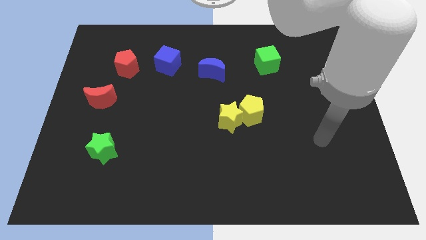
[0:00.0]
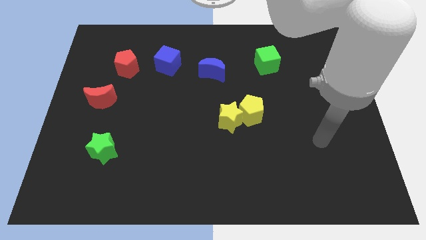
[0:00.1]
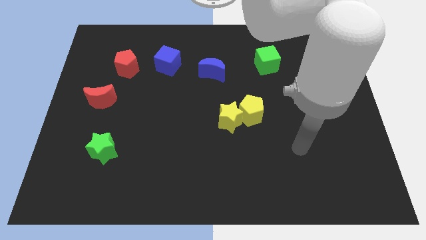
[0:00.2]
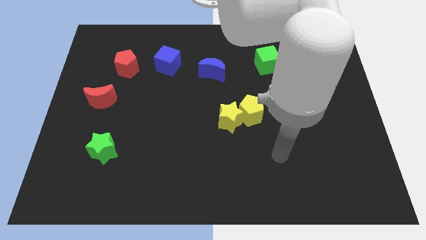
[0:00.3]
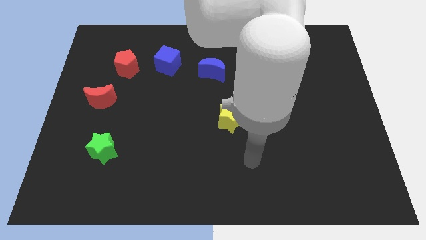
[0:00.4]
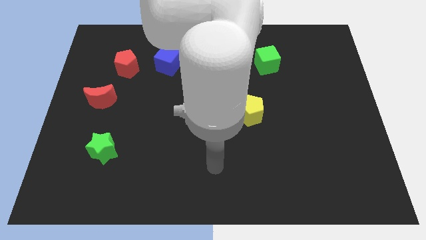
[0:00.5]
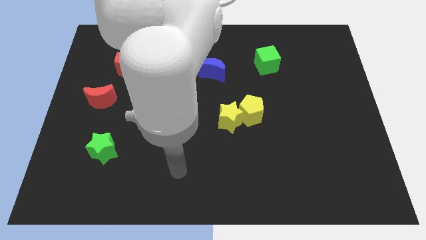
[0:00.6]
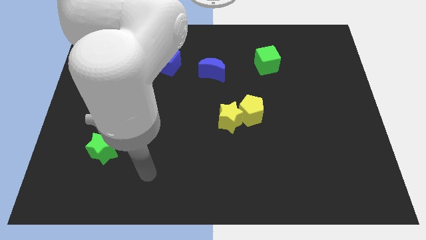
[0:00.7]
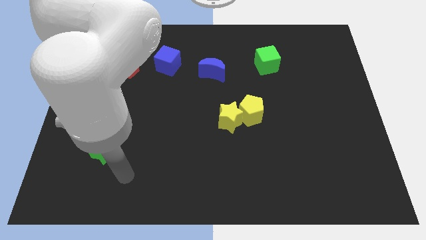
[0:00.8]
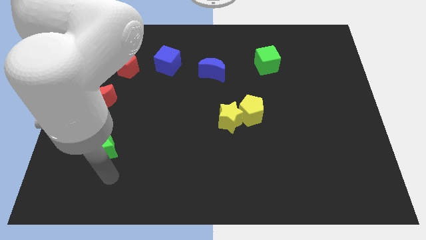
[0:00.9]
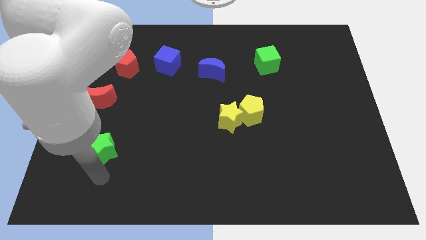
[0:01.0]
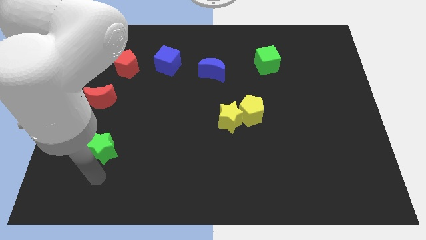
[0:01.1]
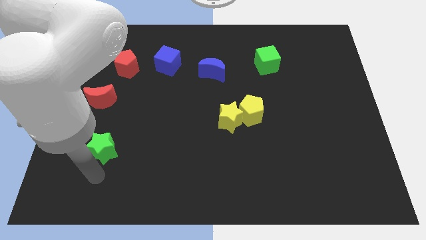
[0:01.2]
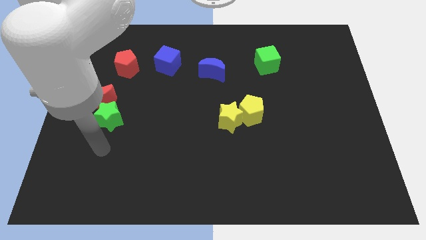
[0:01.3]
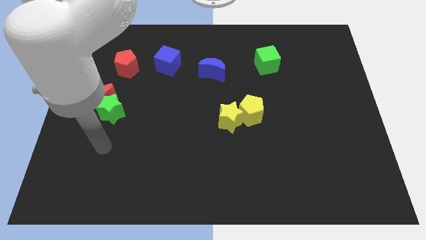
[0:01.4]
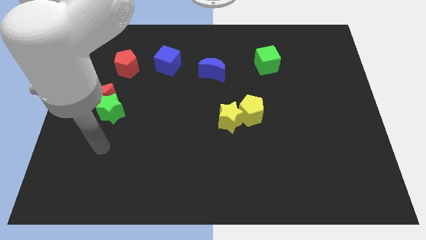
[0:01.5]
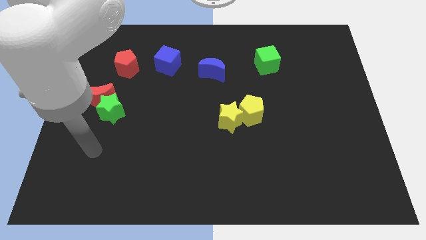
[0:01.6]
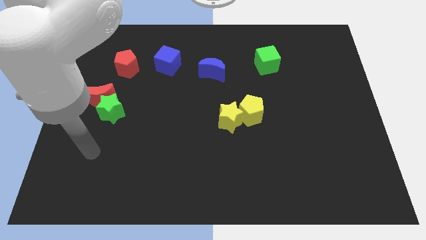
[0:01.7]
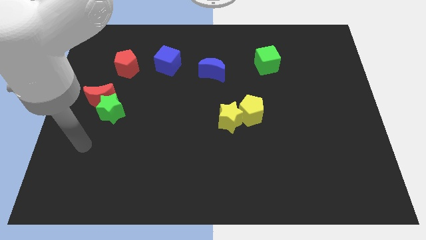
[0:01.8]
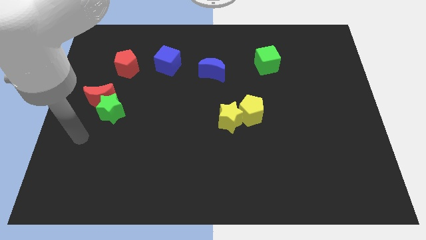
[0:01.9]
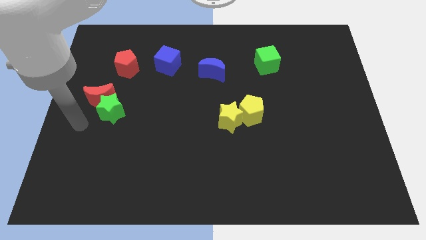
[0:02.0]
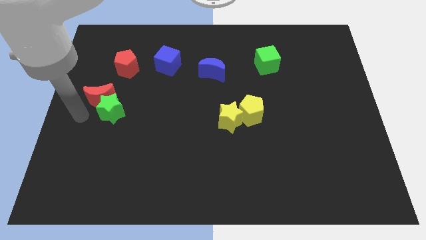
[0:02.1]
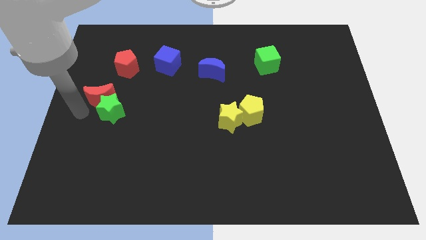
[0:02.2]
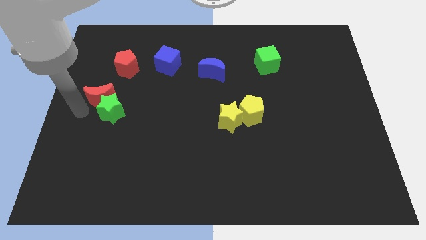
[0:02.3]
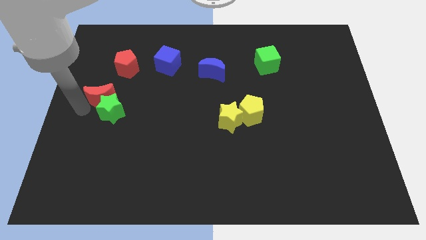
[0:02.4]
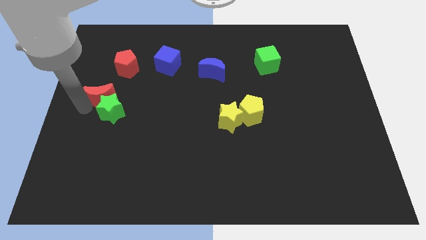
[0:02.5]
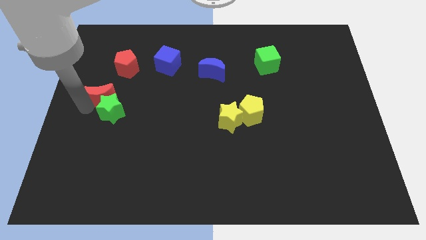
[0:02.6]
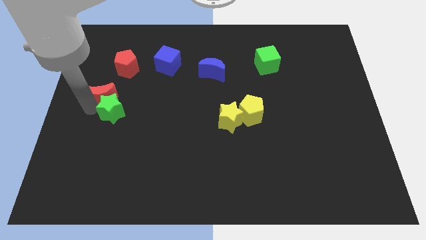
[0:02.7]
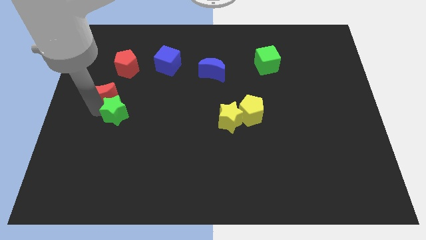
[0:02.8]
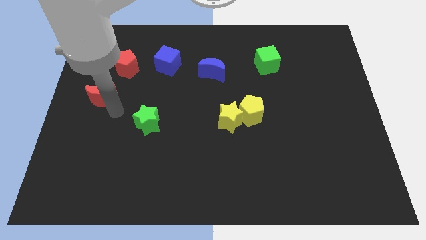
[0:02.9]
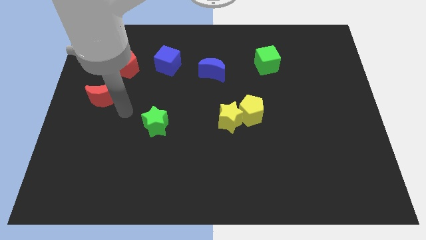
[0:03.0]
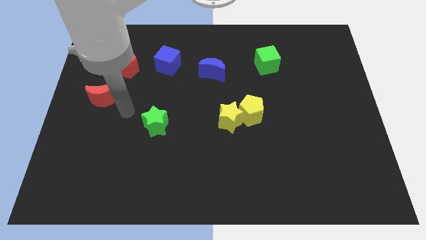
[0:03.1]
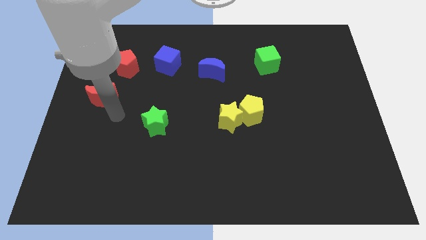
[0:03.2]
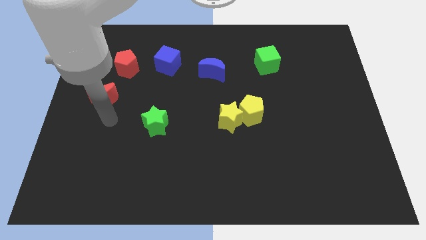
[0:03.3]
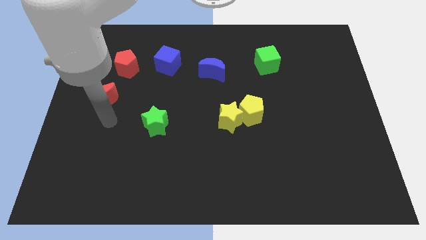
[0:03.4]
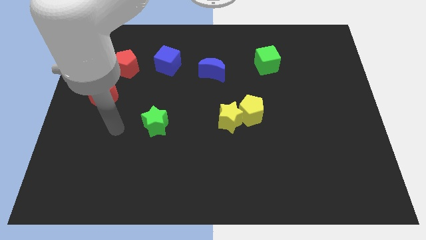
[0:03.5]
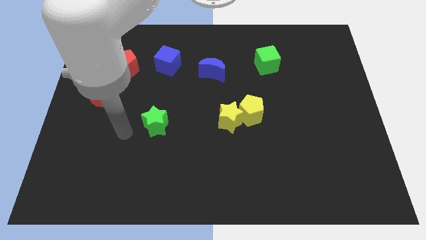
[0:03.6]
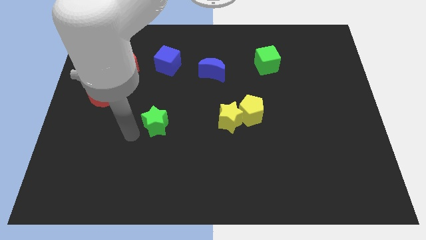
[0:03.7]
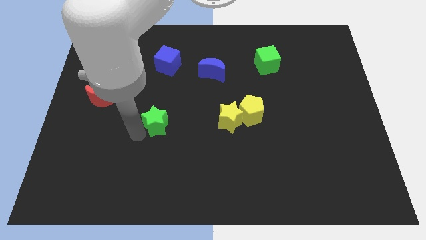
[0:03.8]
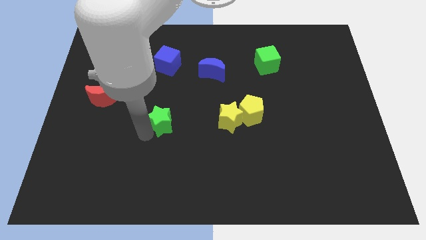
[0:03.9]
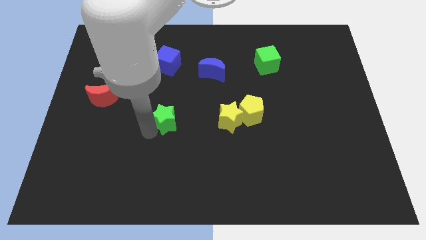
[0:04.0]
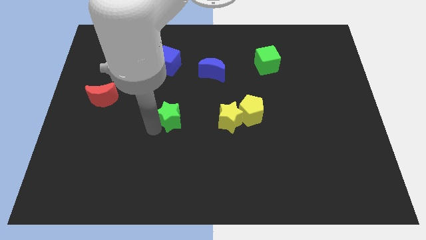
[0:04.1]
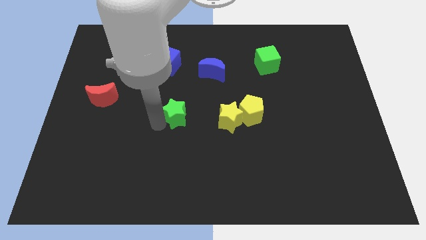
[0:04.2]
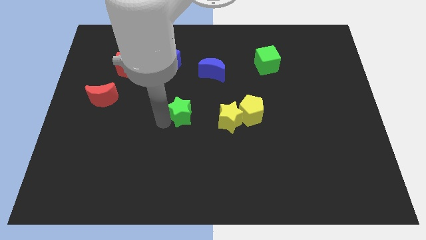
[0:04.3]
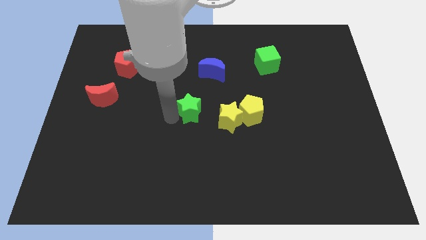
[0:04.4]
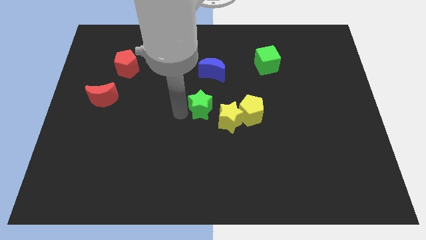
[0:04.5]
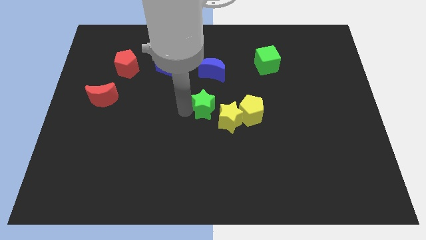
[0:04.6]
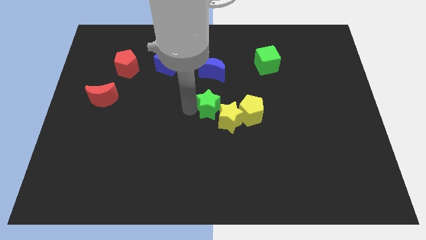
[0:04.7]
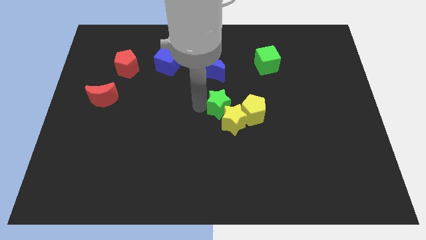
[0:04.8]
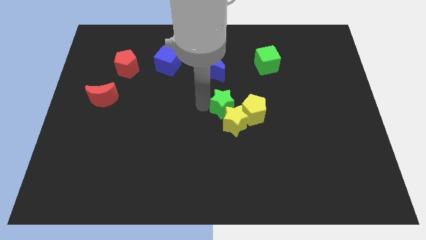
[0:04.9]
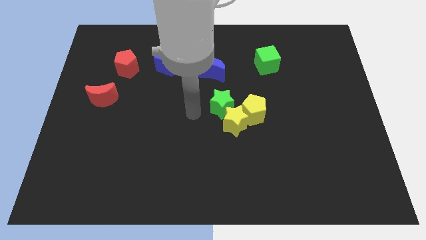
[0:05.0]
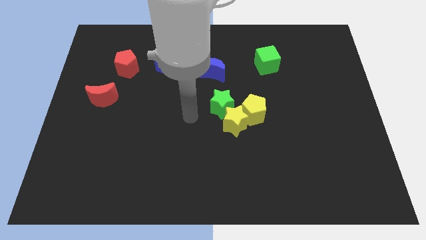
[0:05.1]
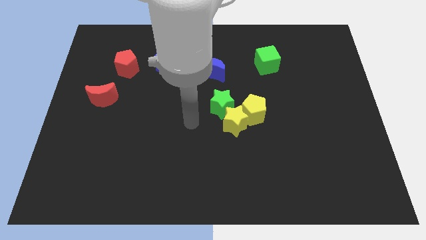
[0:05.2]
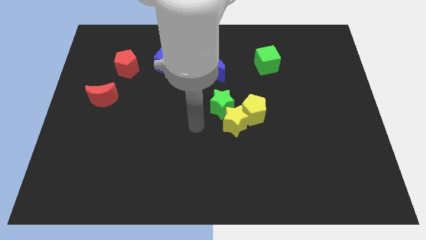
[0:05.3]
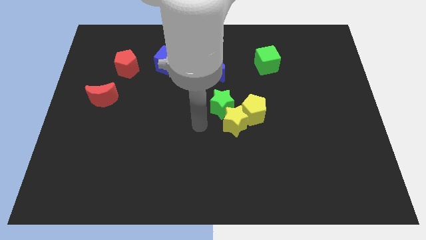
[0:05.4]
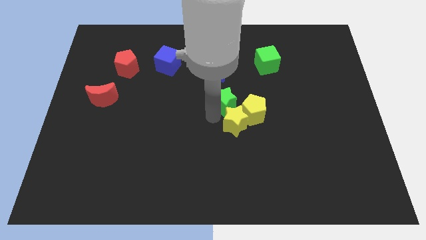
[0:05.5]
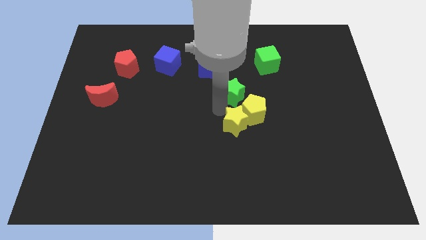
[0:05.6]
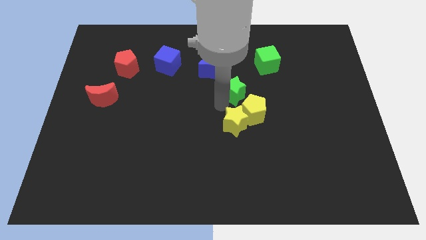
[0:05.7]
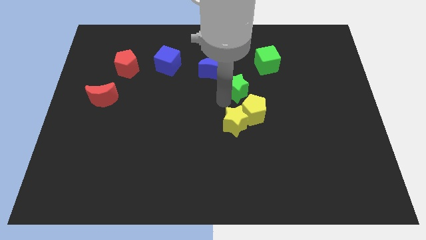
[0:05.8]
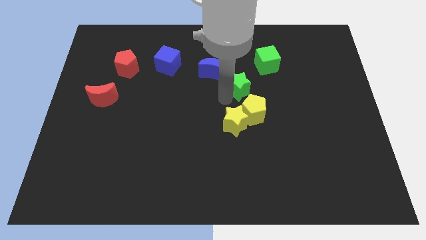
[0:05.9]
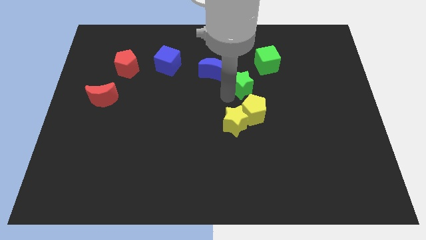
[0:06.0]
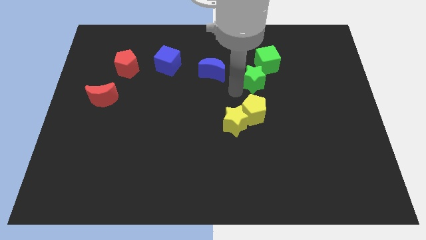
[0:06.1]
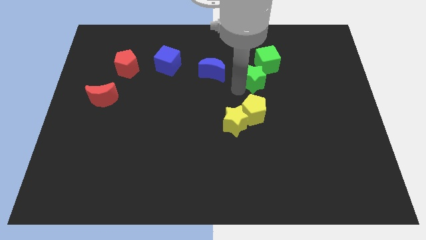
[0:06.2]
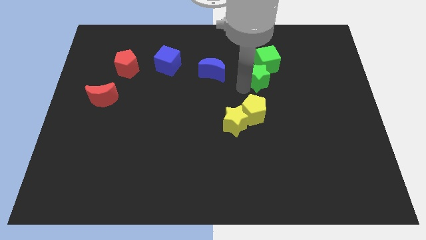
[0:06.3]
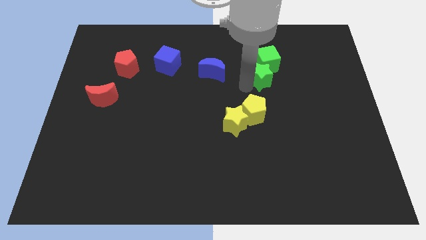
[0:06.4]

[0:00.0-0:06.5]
slide the green star towards the green cube

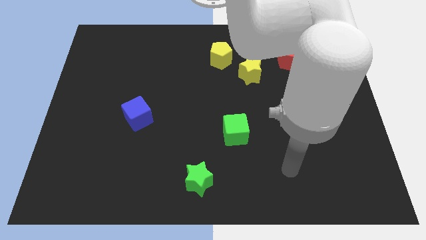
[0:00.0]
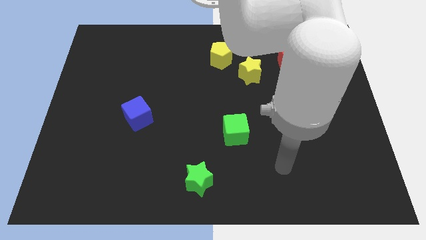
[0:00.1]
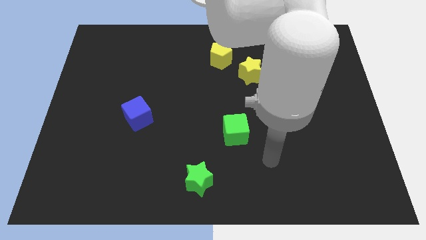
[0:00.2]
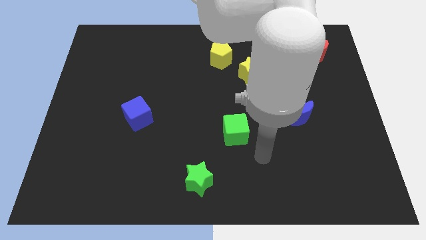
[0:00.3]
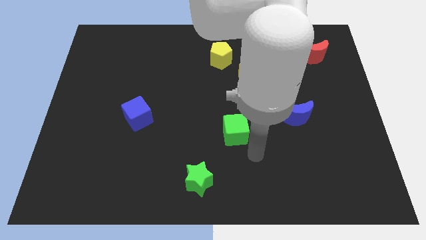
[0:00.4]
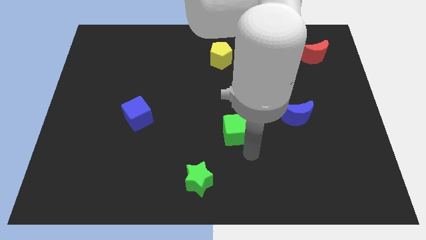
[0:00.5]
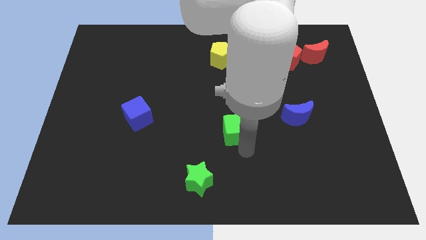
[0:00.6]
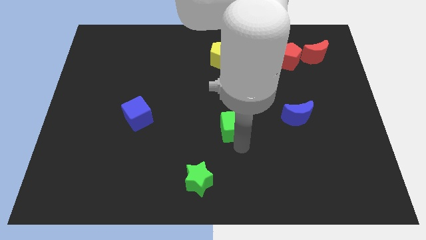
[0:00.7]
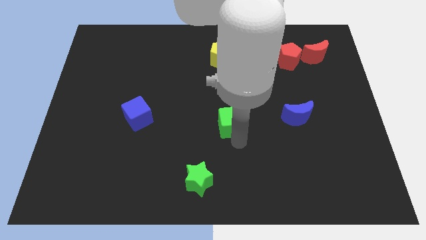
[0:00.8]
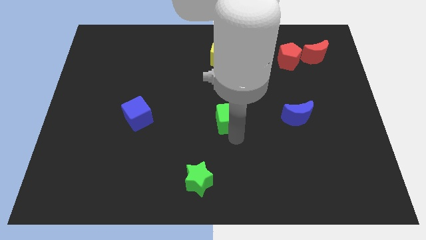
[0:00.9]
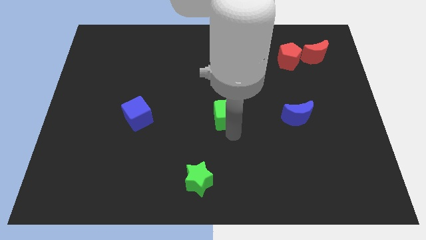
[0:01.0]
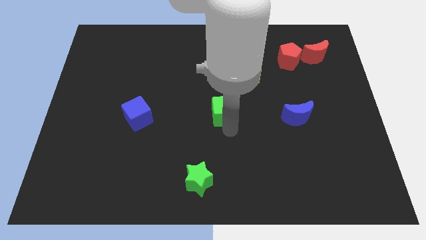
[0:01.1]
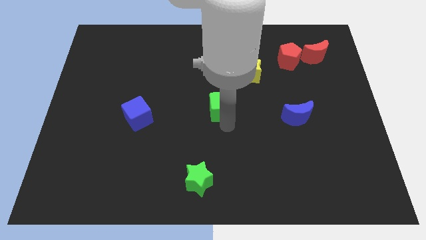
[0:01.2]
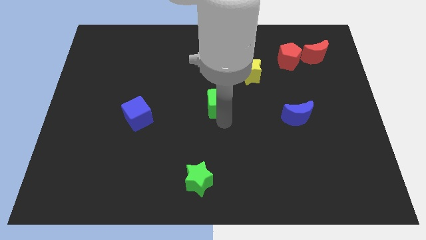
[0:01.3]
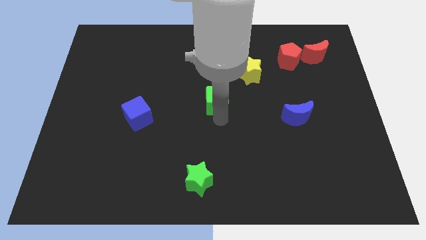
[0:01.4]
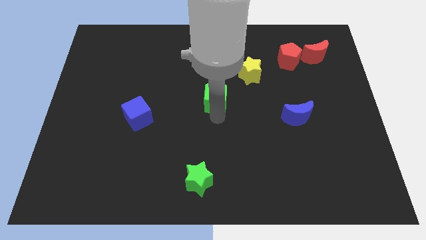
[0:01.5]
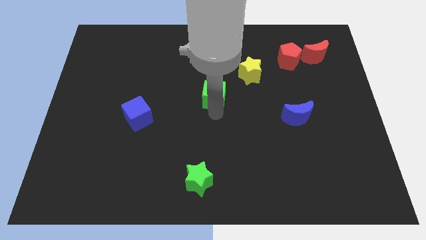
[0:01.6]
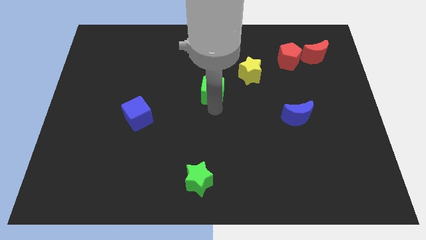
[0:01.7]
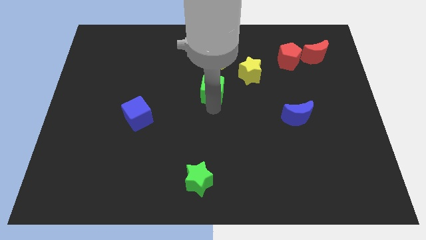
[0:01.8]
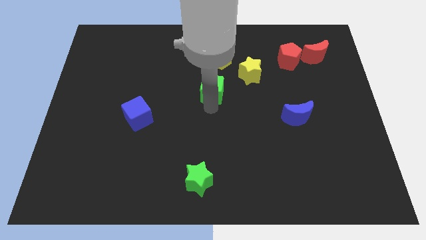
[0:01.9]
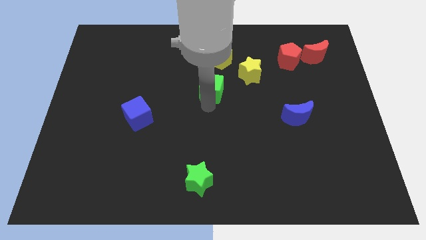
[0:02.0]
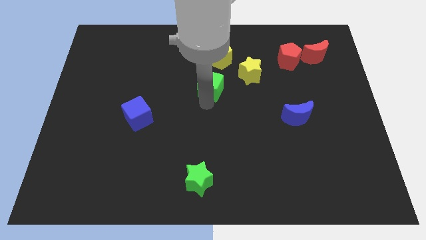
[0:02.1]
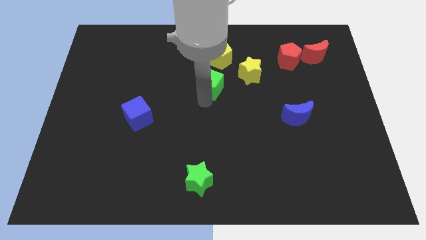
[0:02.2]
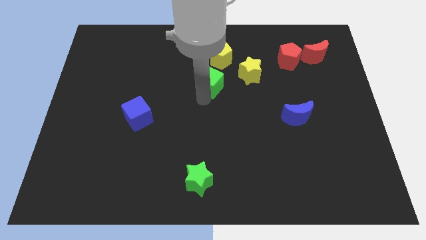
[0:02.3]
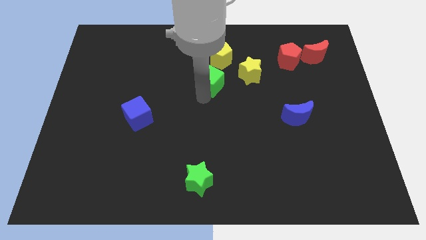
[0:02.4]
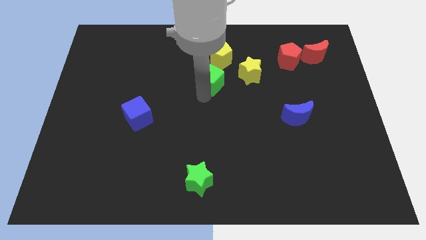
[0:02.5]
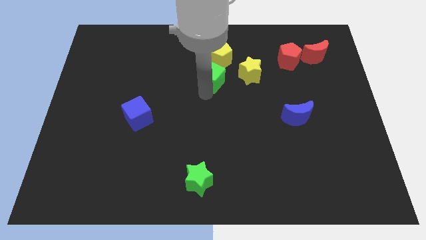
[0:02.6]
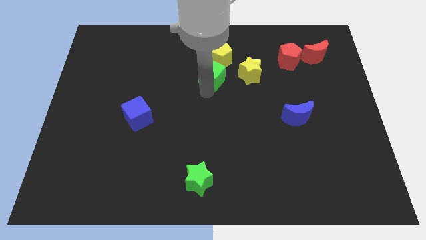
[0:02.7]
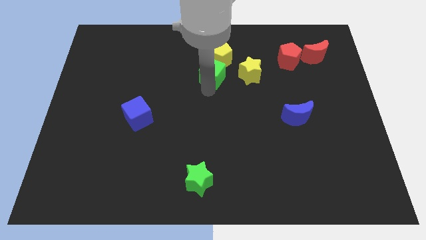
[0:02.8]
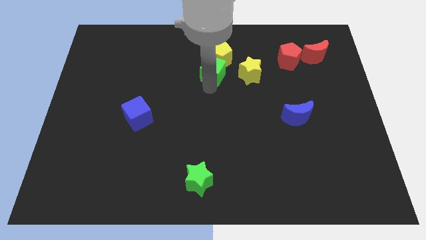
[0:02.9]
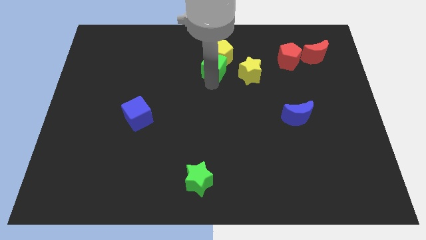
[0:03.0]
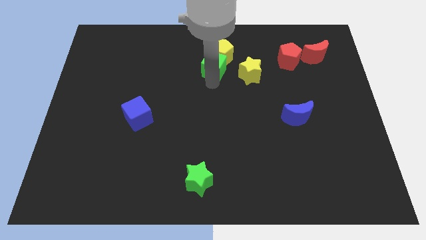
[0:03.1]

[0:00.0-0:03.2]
slide the green cube next to the yellow pentagon
